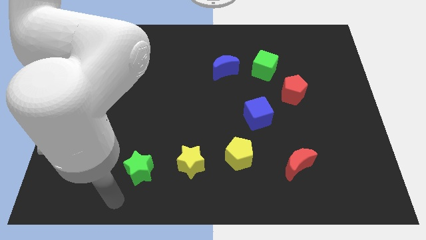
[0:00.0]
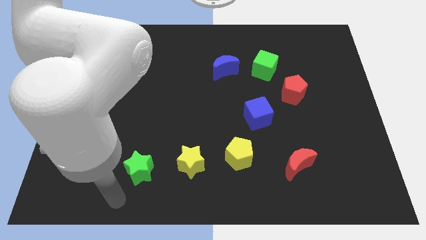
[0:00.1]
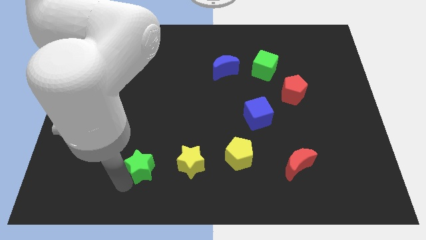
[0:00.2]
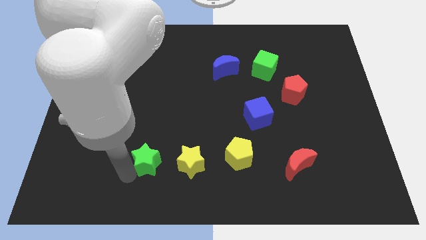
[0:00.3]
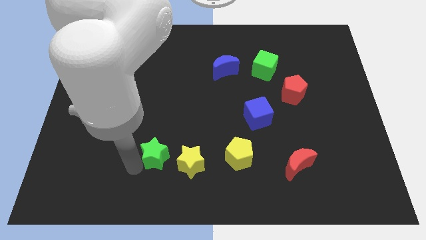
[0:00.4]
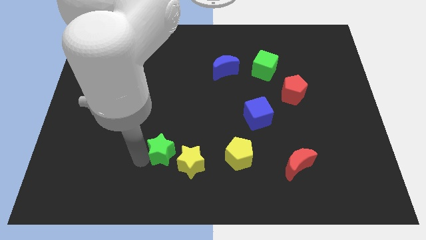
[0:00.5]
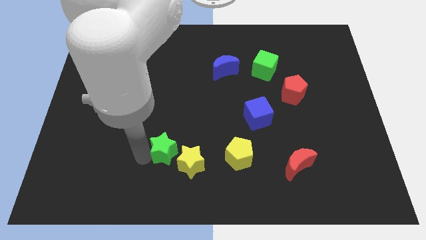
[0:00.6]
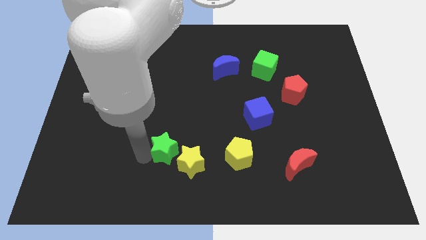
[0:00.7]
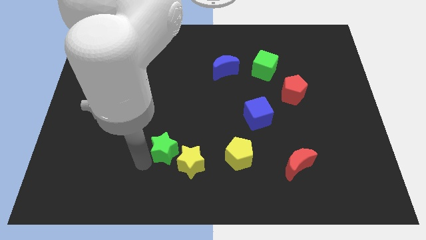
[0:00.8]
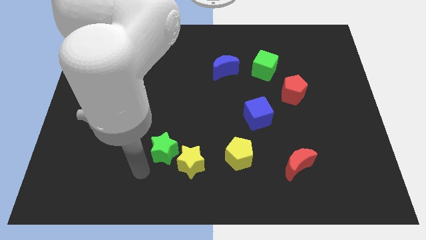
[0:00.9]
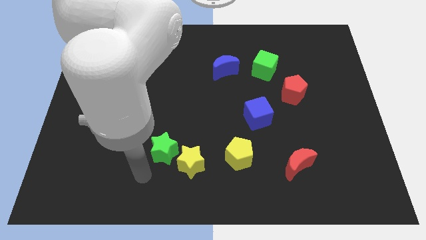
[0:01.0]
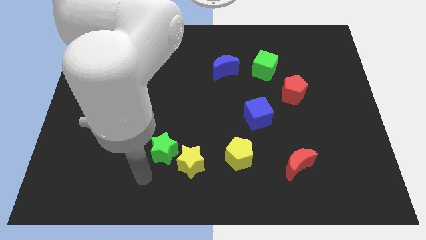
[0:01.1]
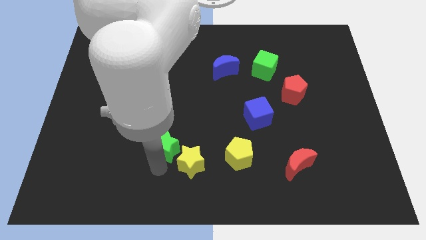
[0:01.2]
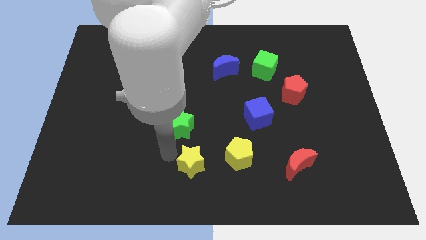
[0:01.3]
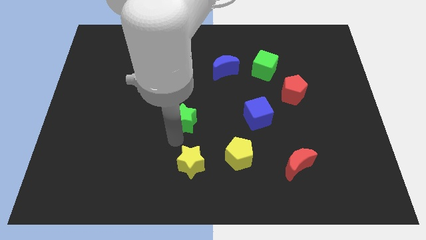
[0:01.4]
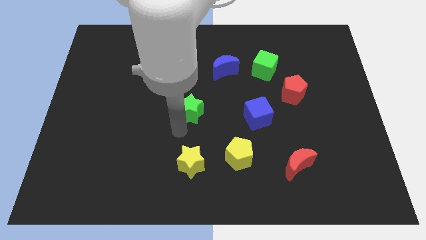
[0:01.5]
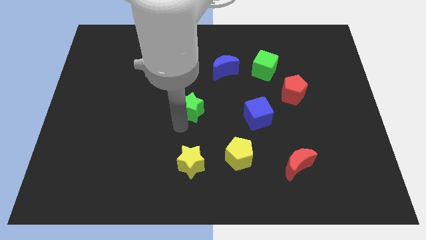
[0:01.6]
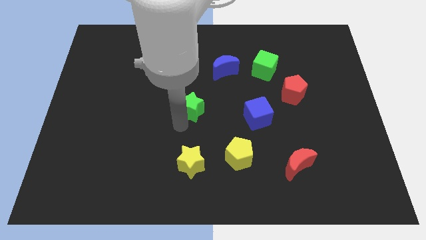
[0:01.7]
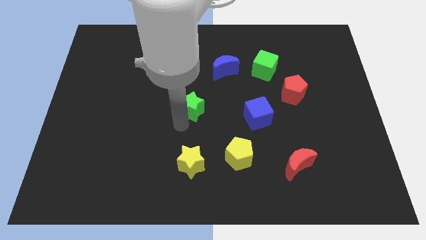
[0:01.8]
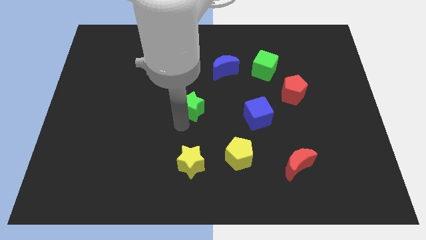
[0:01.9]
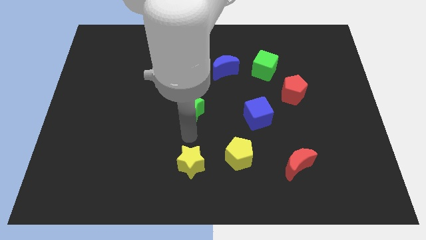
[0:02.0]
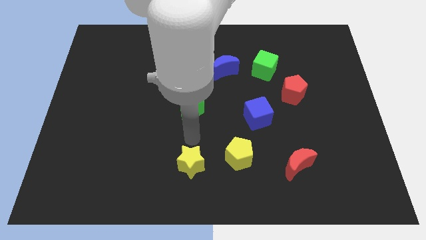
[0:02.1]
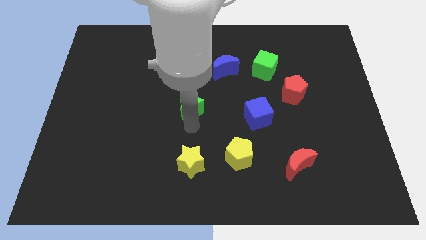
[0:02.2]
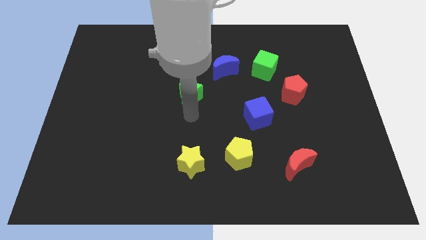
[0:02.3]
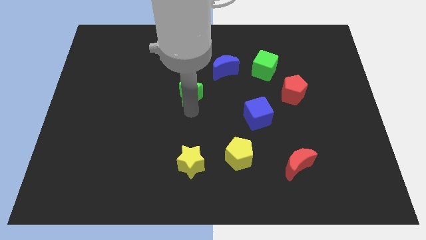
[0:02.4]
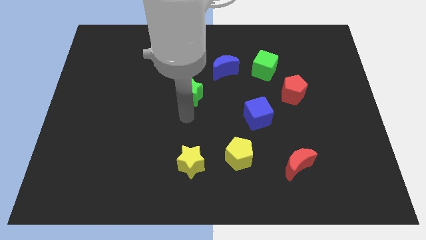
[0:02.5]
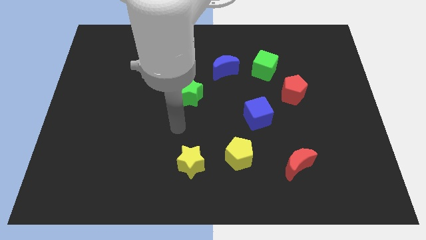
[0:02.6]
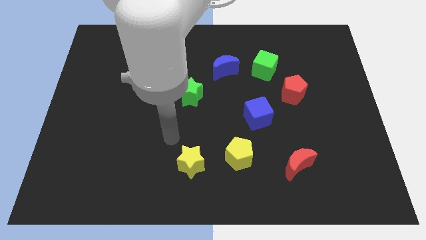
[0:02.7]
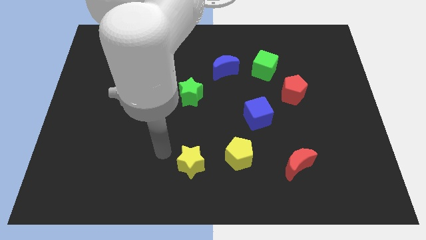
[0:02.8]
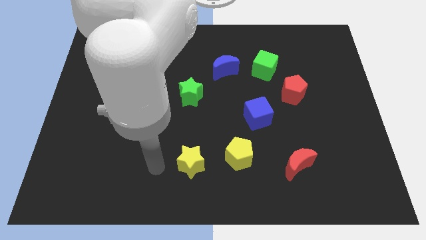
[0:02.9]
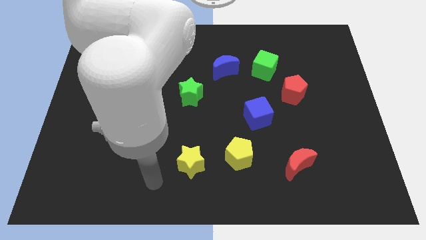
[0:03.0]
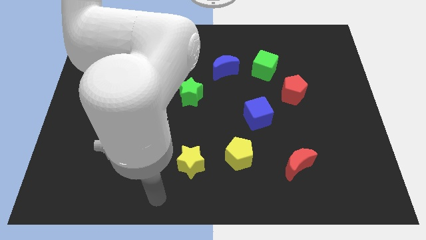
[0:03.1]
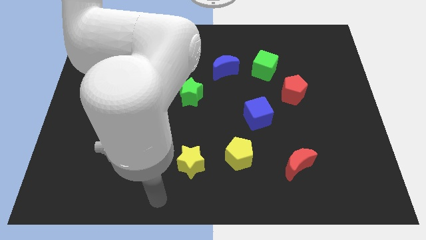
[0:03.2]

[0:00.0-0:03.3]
move the green star diagonall top left to yellow pentagon

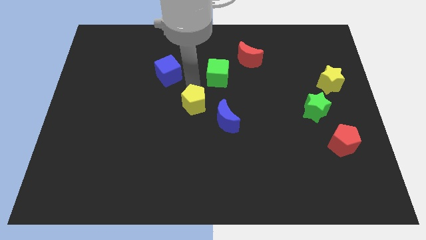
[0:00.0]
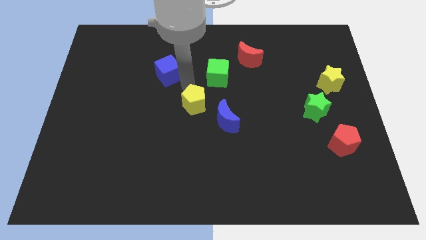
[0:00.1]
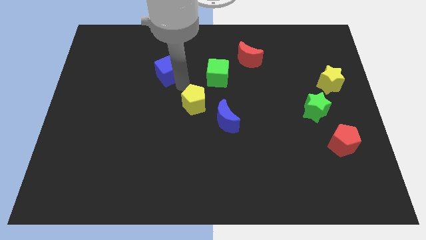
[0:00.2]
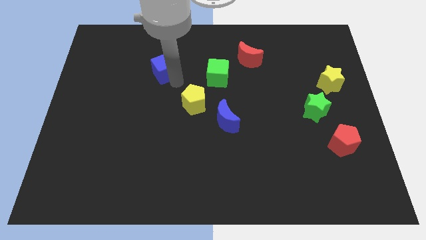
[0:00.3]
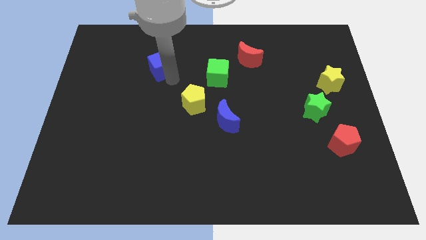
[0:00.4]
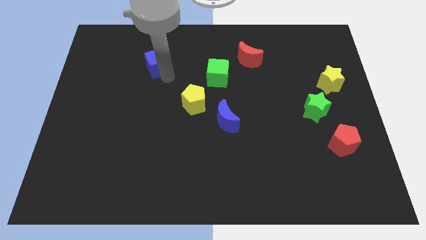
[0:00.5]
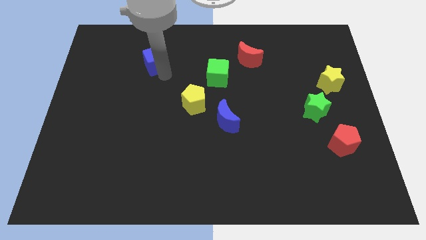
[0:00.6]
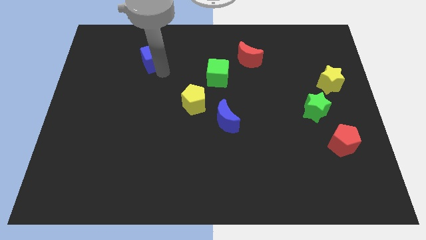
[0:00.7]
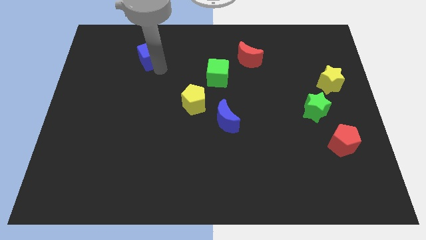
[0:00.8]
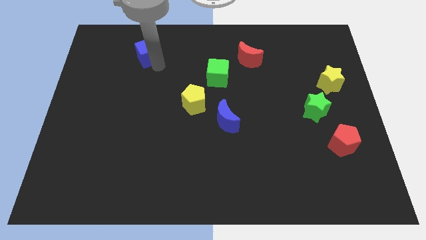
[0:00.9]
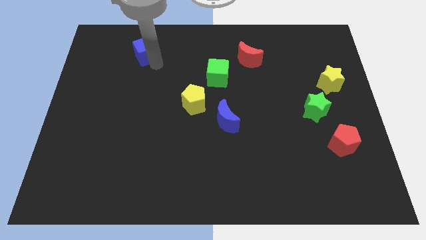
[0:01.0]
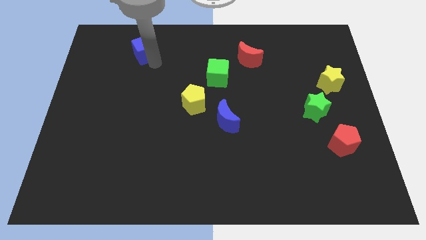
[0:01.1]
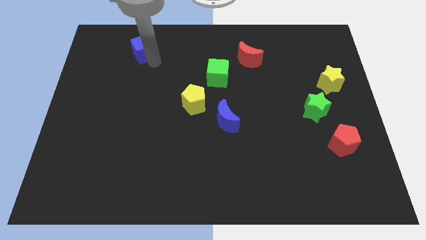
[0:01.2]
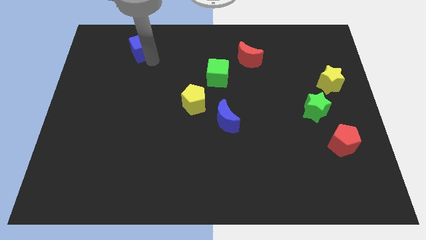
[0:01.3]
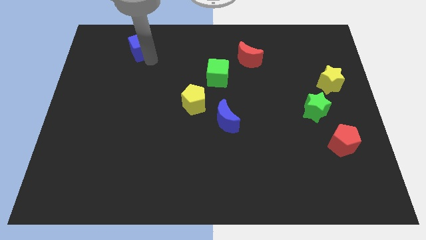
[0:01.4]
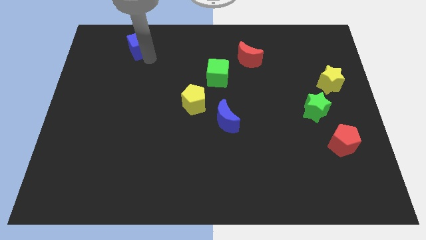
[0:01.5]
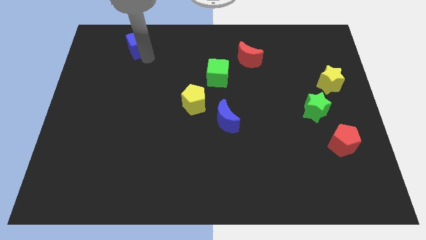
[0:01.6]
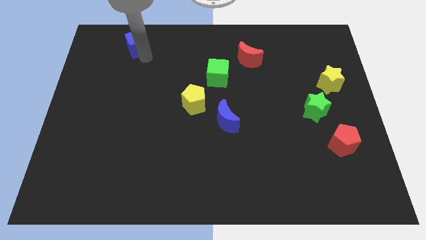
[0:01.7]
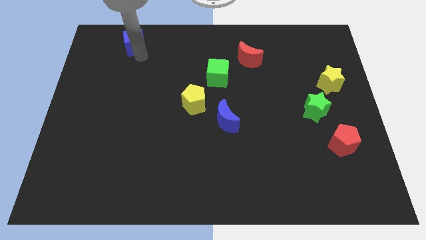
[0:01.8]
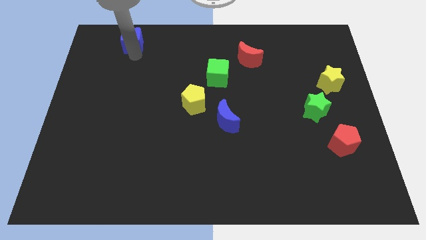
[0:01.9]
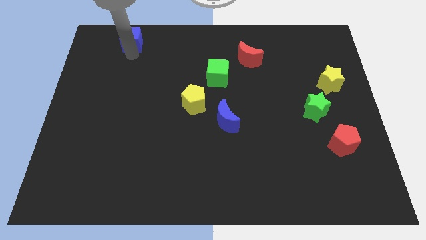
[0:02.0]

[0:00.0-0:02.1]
slide blue cube towards top left

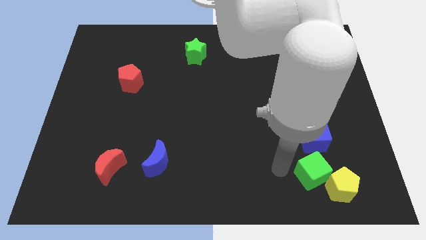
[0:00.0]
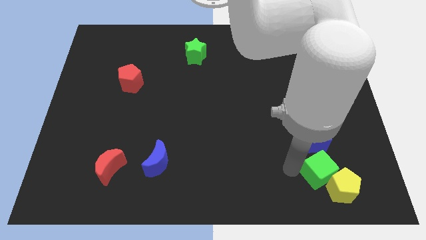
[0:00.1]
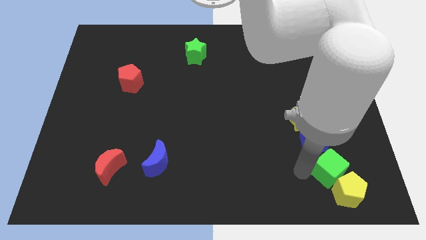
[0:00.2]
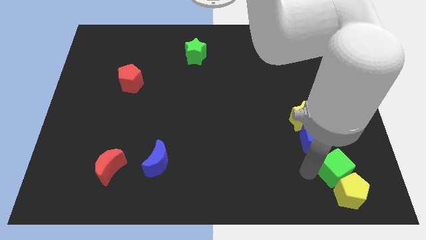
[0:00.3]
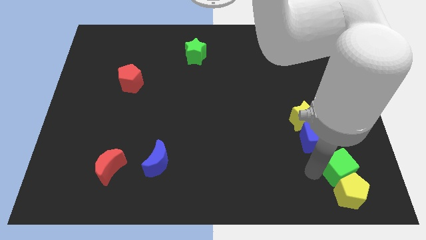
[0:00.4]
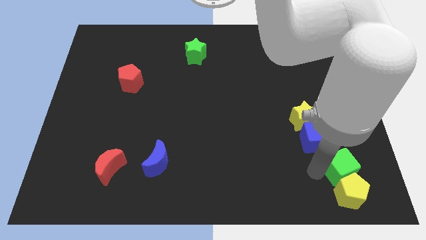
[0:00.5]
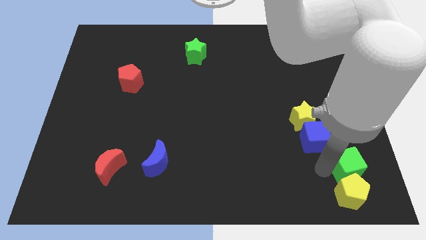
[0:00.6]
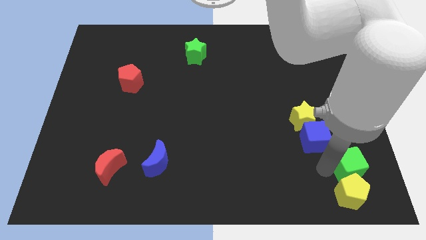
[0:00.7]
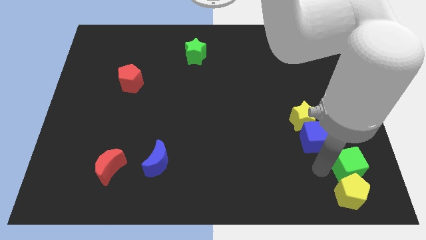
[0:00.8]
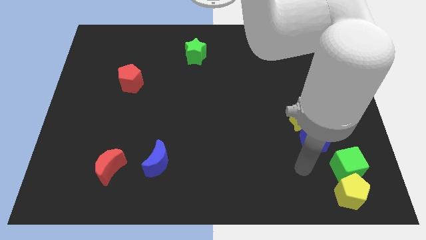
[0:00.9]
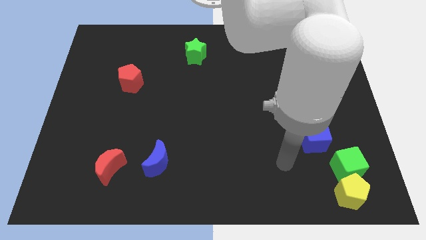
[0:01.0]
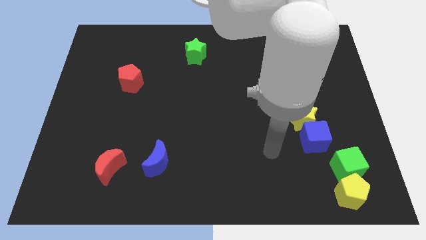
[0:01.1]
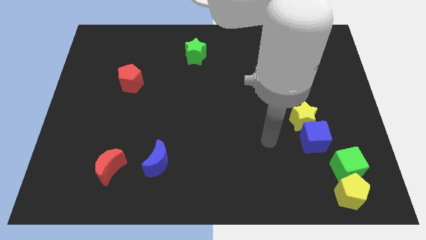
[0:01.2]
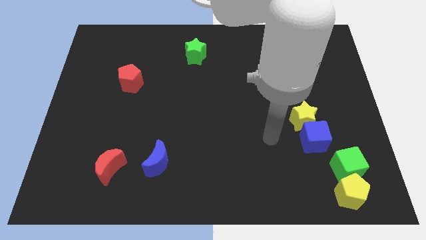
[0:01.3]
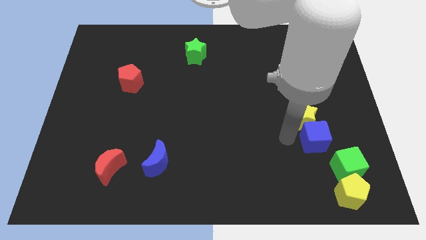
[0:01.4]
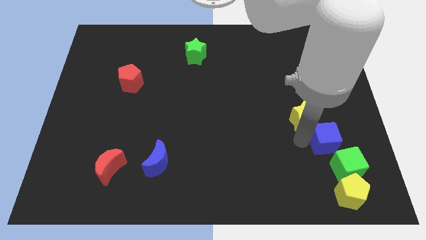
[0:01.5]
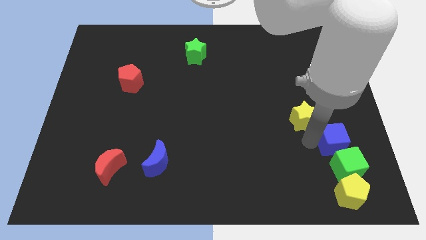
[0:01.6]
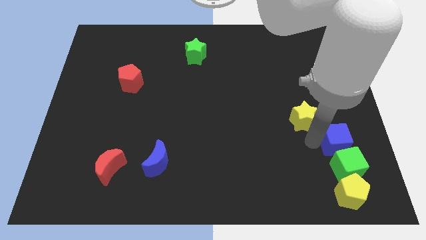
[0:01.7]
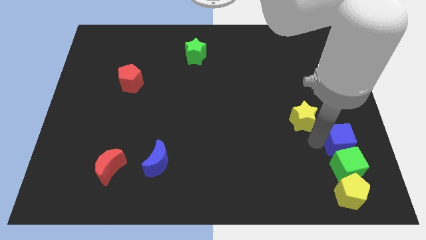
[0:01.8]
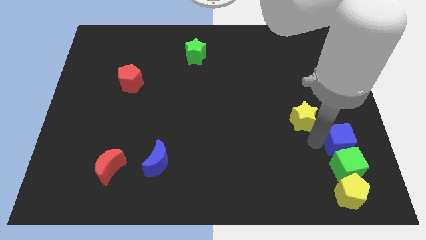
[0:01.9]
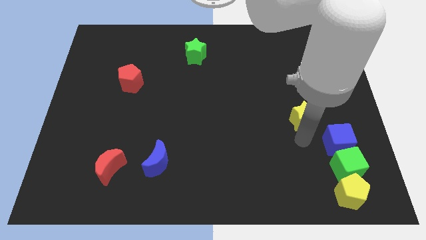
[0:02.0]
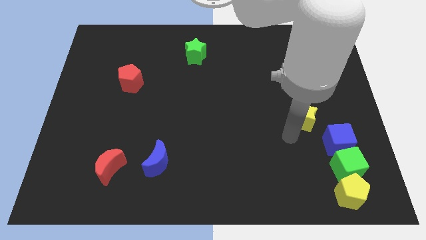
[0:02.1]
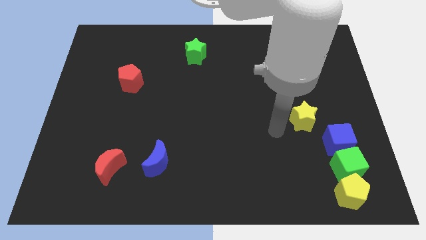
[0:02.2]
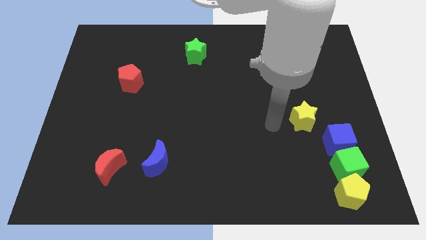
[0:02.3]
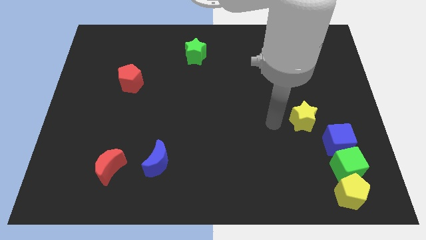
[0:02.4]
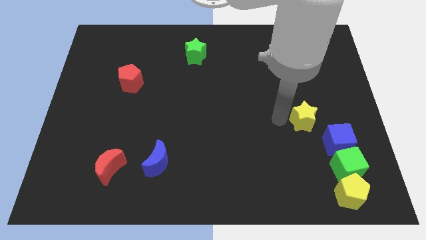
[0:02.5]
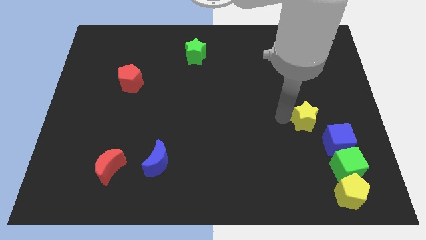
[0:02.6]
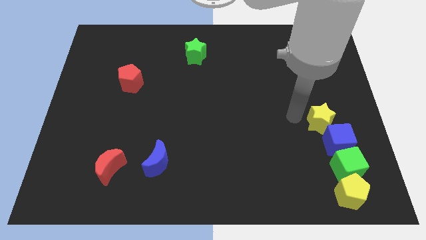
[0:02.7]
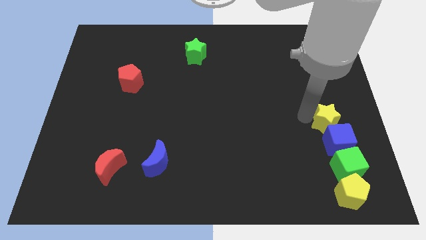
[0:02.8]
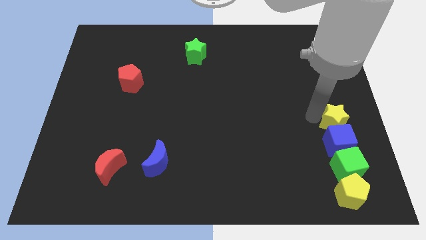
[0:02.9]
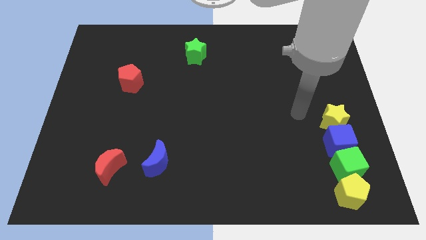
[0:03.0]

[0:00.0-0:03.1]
adjust the cubes and yellow blocks to form a line

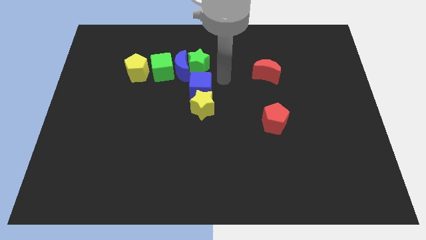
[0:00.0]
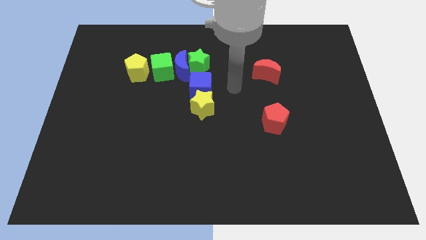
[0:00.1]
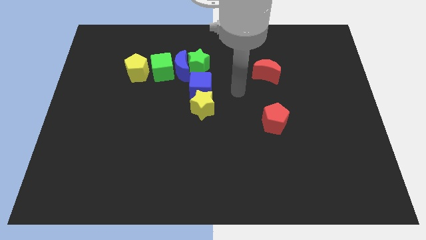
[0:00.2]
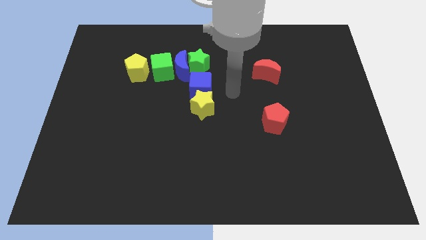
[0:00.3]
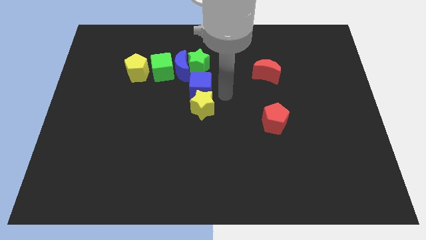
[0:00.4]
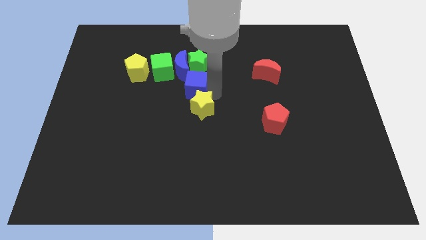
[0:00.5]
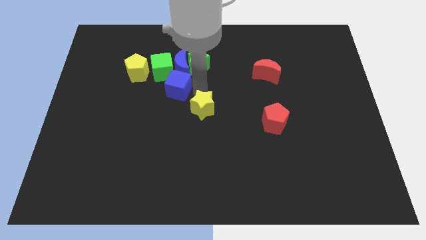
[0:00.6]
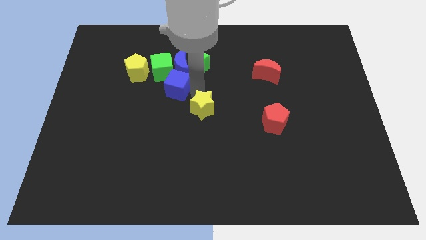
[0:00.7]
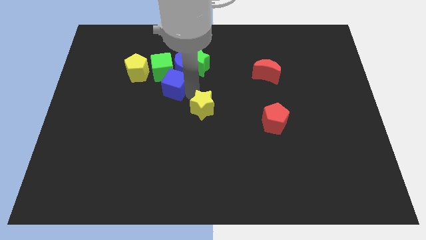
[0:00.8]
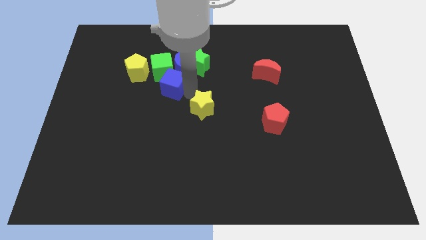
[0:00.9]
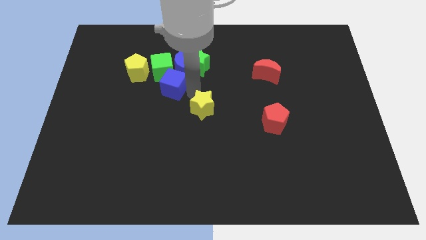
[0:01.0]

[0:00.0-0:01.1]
push the blue cube to the bottom right of the green cube
